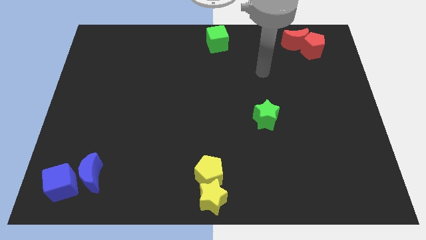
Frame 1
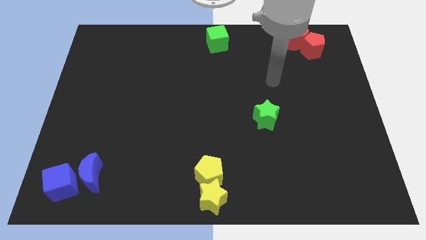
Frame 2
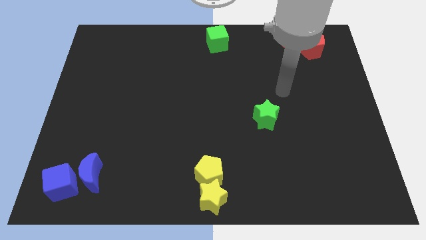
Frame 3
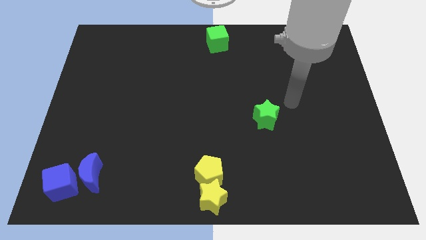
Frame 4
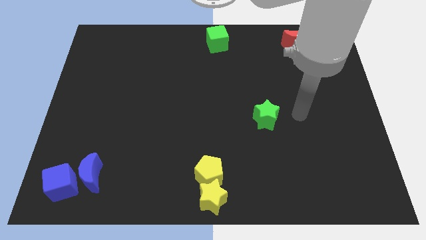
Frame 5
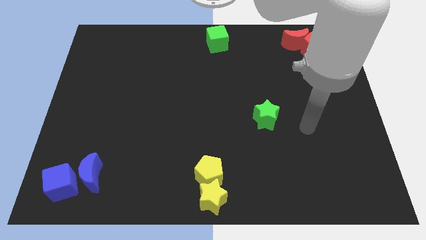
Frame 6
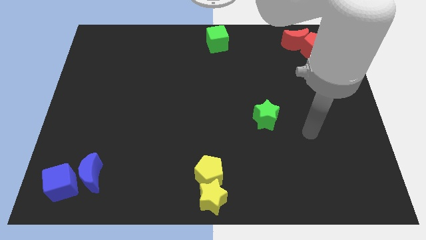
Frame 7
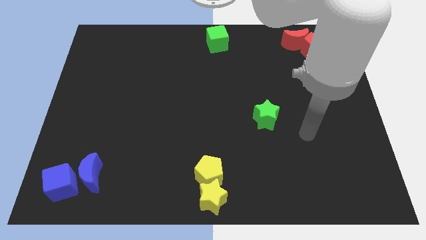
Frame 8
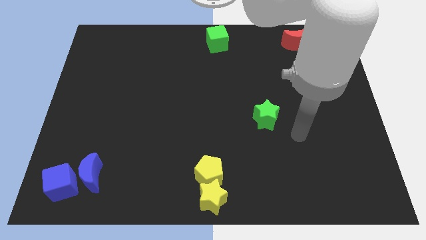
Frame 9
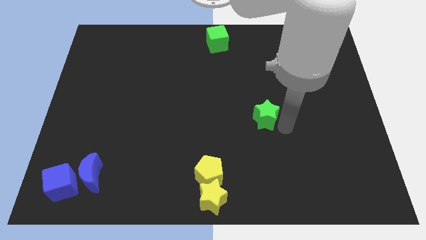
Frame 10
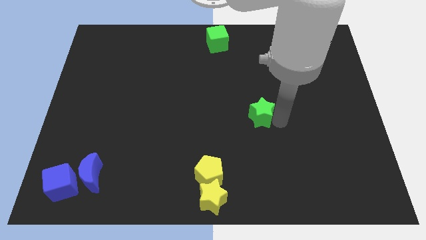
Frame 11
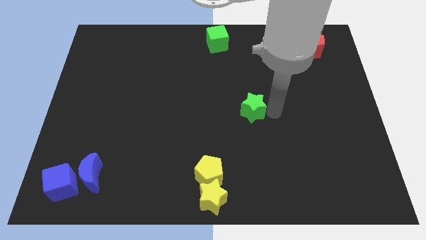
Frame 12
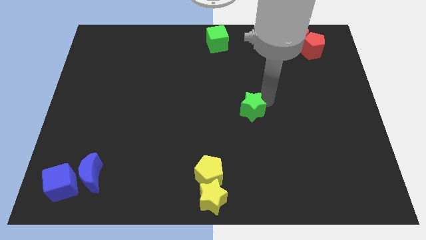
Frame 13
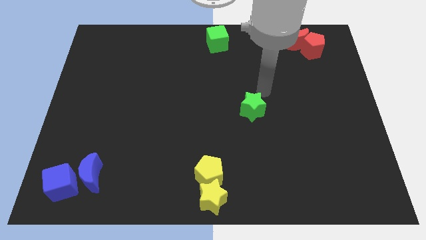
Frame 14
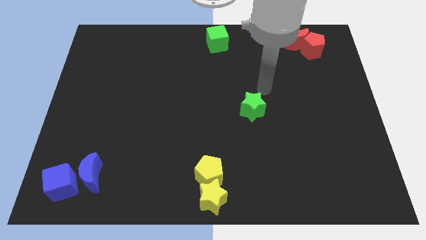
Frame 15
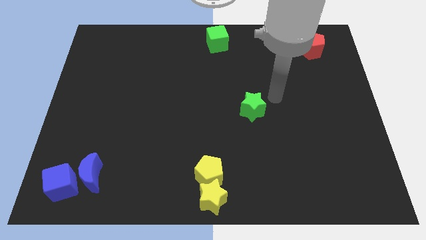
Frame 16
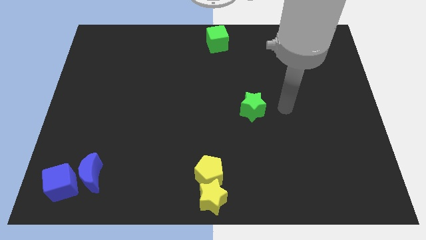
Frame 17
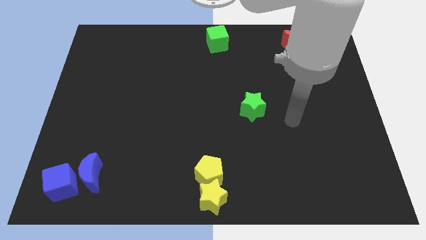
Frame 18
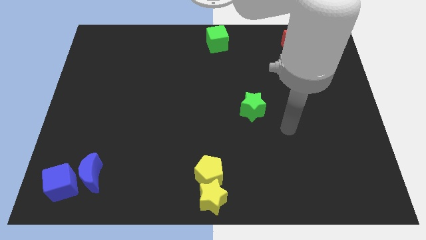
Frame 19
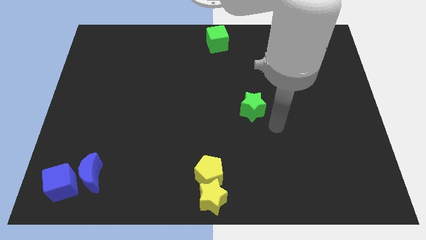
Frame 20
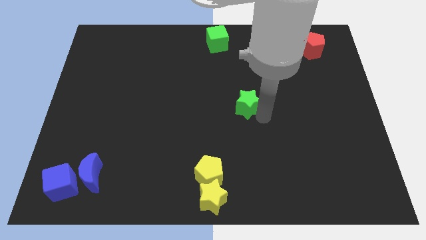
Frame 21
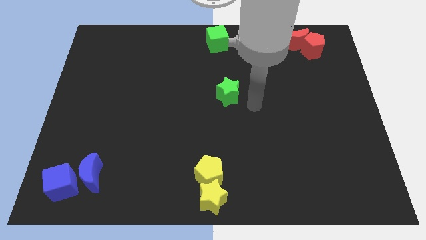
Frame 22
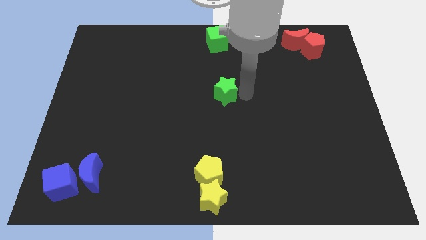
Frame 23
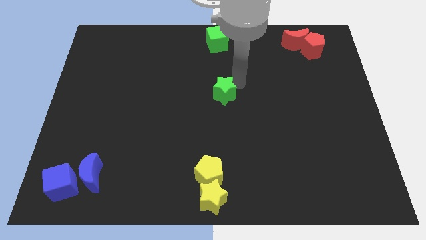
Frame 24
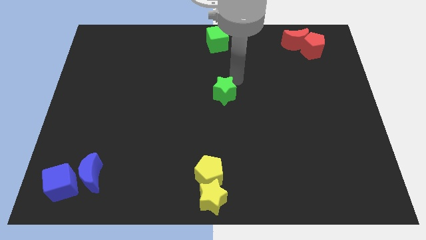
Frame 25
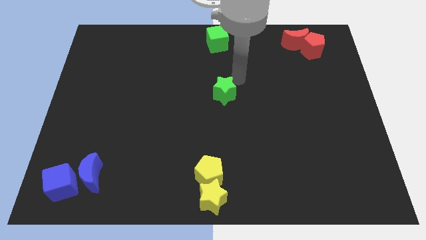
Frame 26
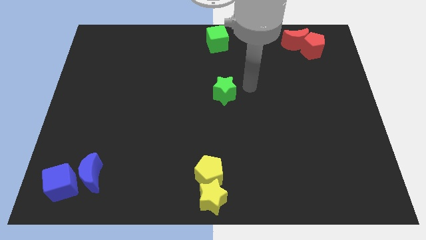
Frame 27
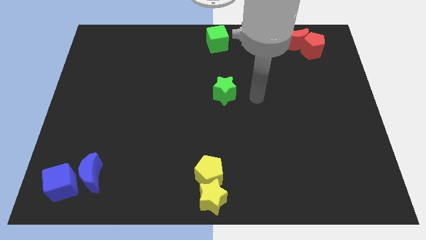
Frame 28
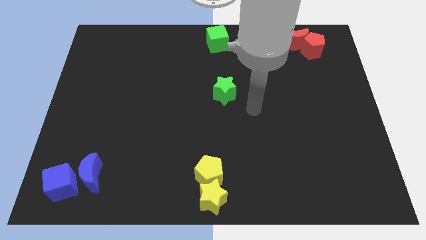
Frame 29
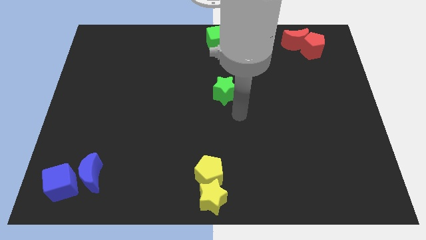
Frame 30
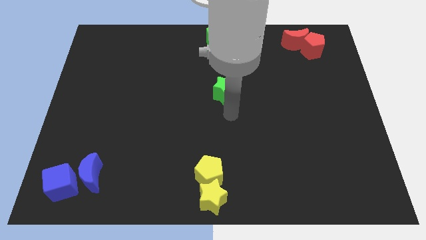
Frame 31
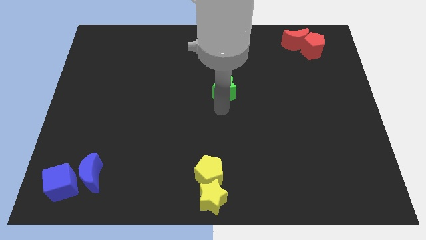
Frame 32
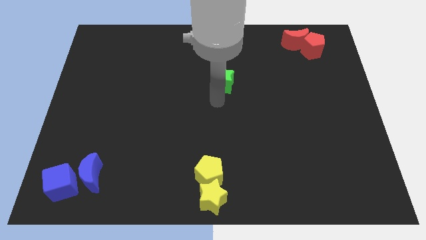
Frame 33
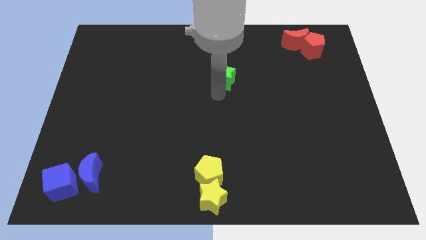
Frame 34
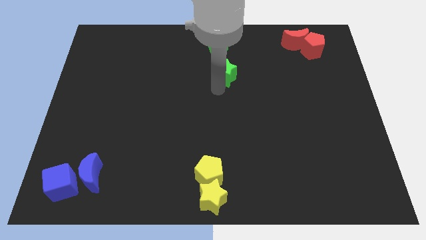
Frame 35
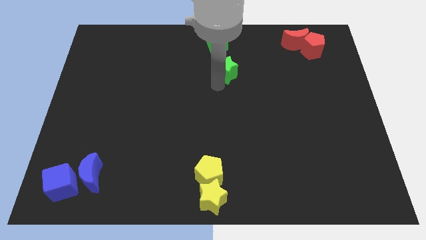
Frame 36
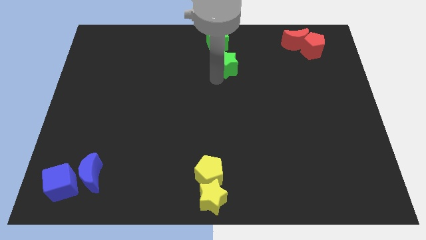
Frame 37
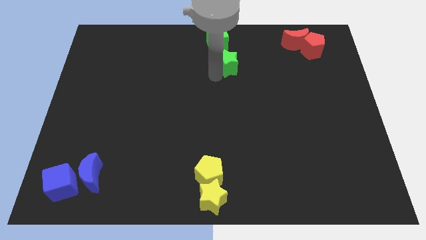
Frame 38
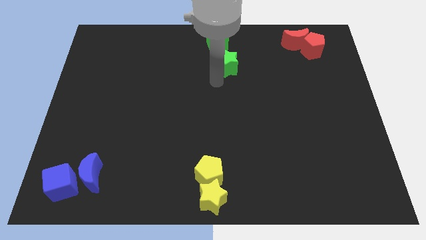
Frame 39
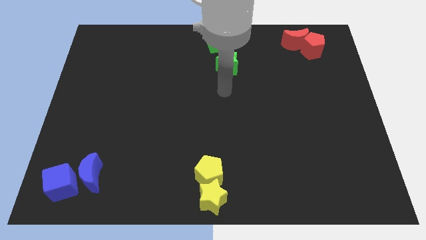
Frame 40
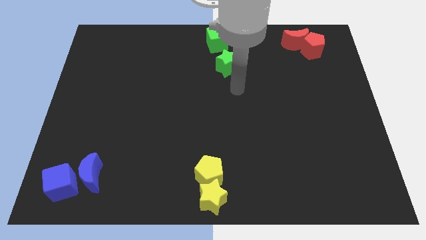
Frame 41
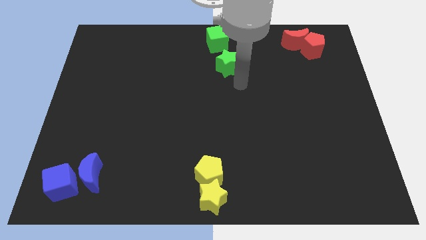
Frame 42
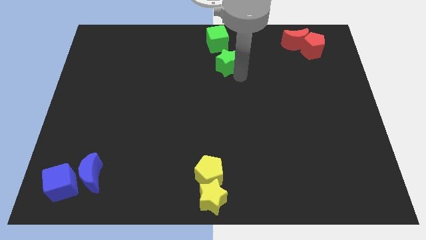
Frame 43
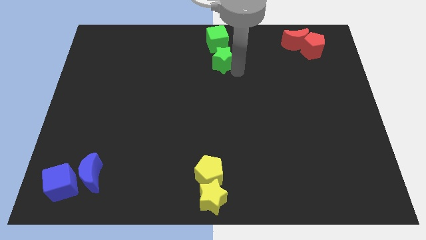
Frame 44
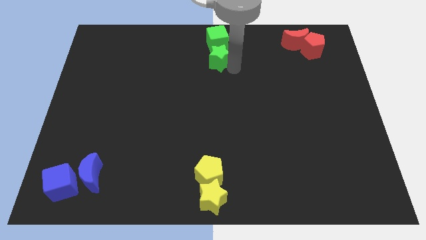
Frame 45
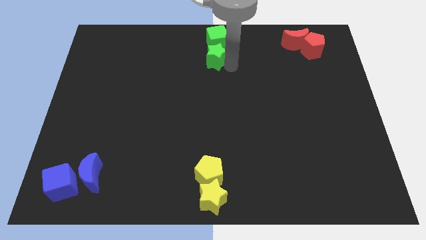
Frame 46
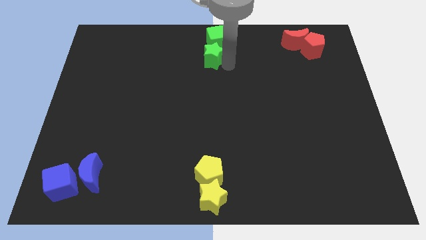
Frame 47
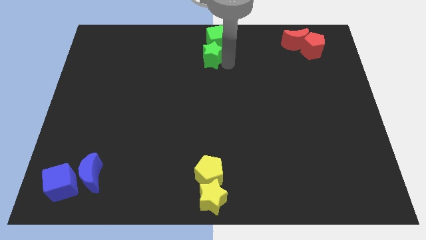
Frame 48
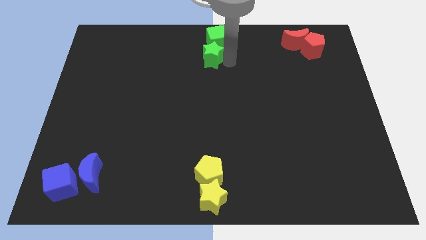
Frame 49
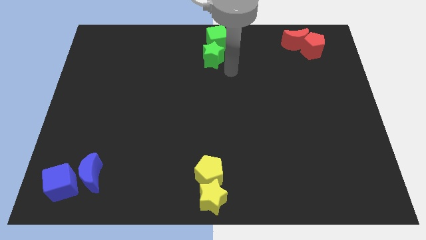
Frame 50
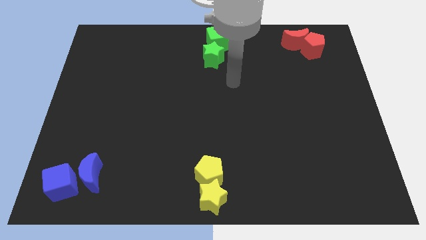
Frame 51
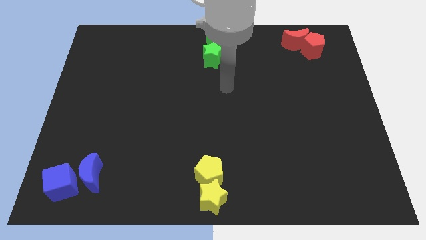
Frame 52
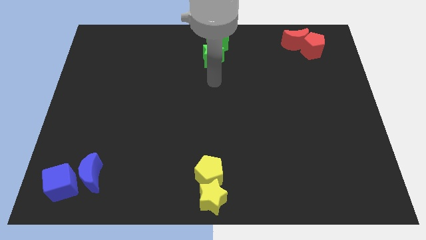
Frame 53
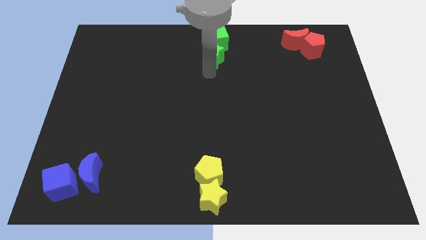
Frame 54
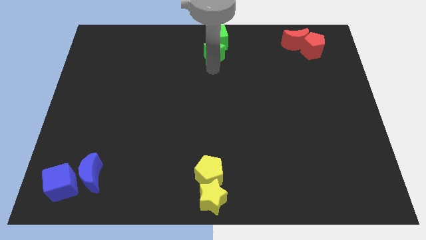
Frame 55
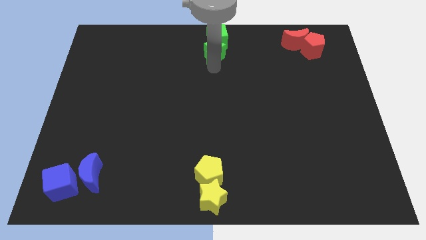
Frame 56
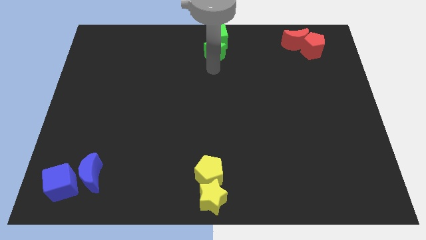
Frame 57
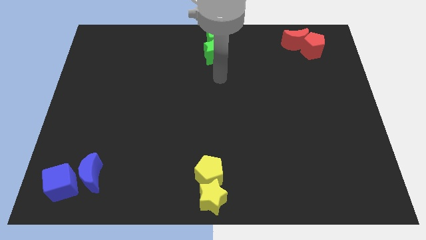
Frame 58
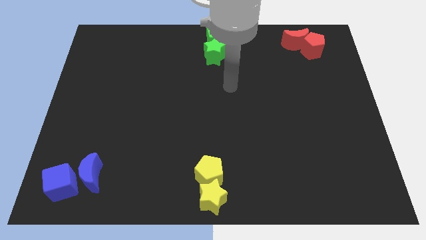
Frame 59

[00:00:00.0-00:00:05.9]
push the green star into the green cube

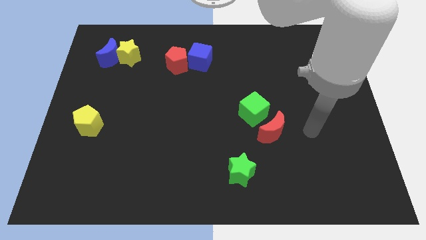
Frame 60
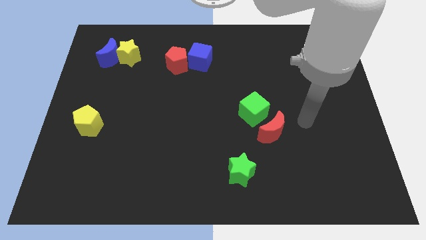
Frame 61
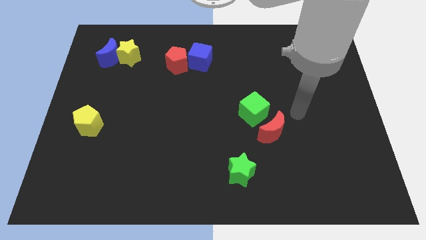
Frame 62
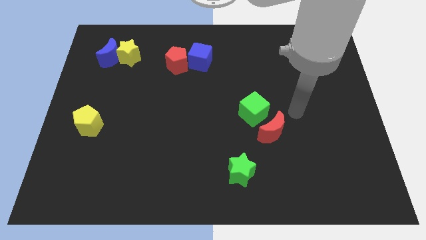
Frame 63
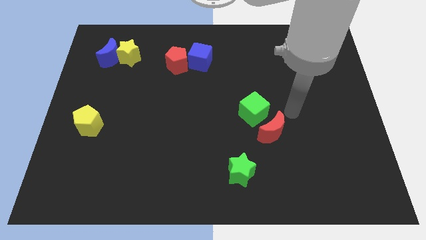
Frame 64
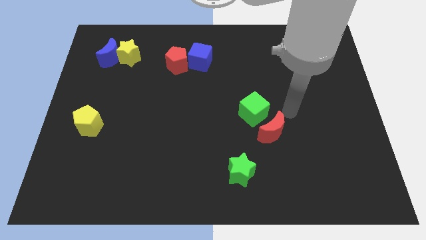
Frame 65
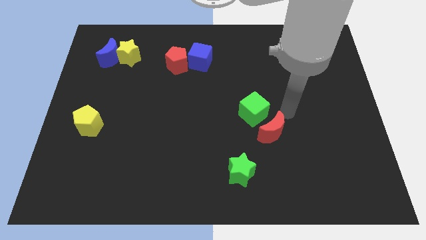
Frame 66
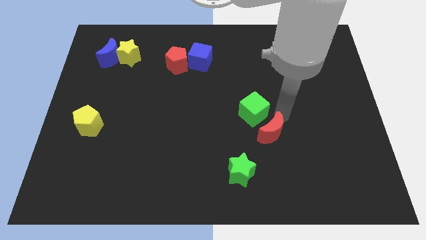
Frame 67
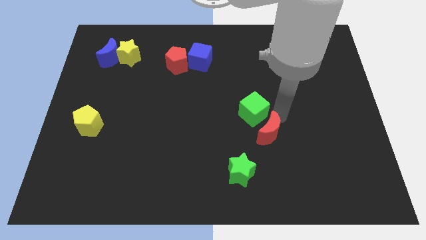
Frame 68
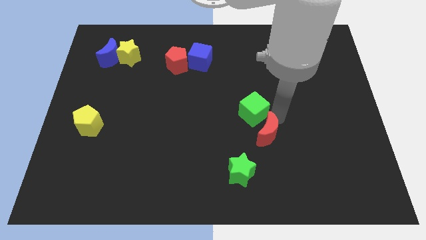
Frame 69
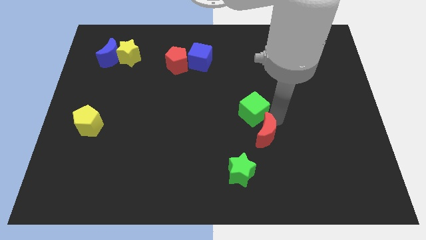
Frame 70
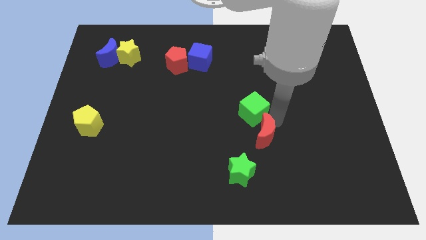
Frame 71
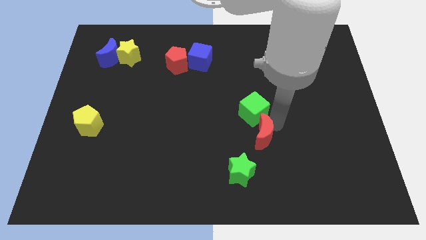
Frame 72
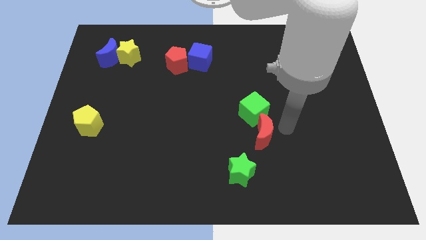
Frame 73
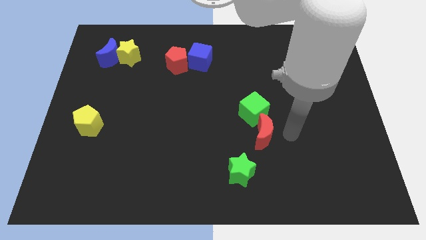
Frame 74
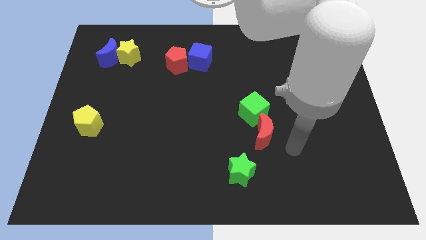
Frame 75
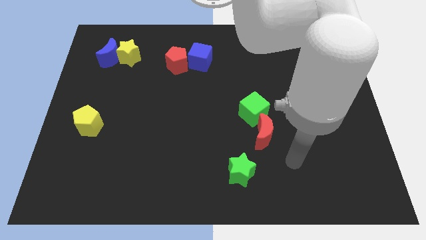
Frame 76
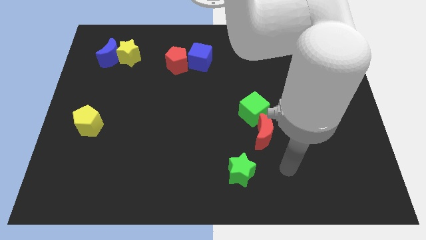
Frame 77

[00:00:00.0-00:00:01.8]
move the red crescent closer to the green cube

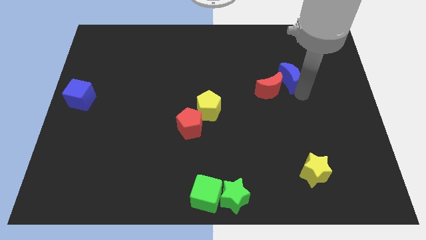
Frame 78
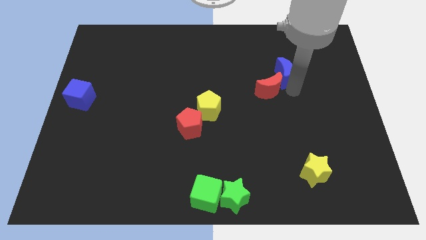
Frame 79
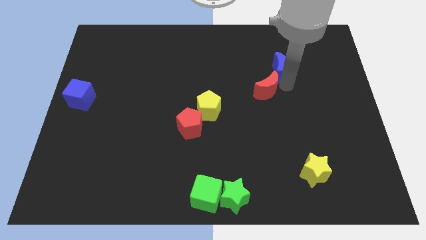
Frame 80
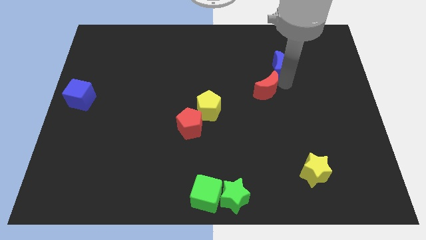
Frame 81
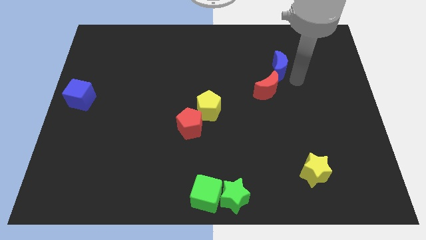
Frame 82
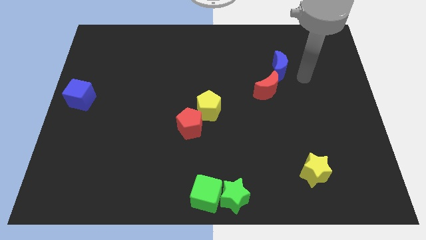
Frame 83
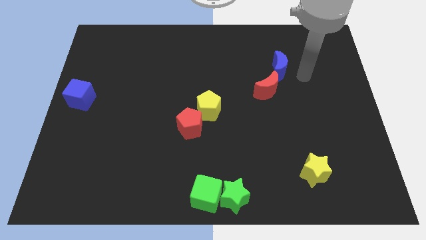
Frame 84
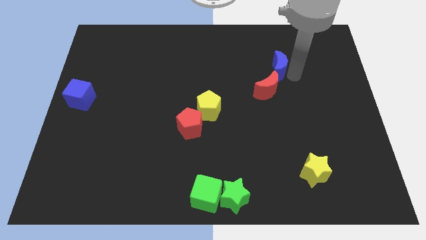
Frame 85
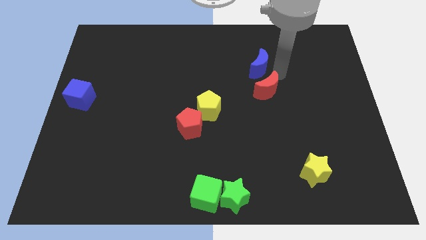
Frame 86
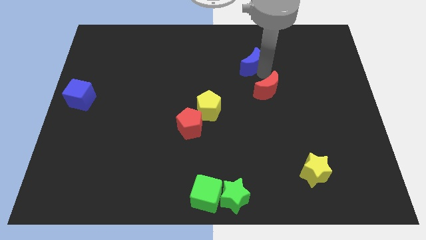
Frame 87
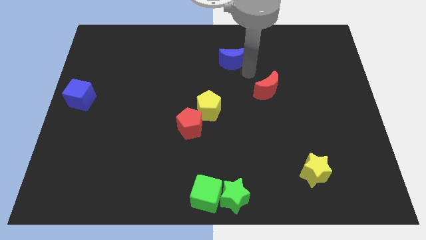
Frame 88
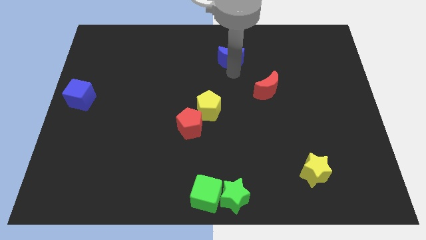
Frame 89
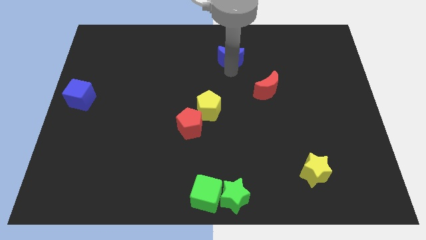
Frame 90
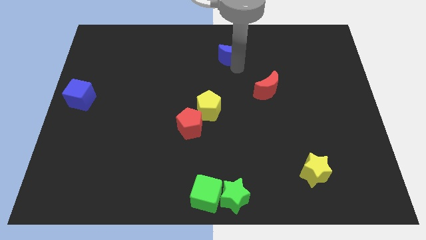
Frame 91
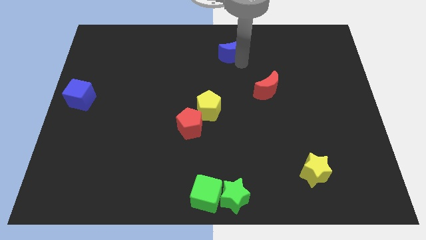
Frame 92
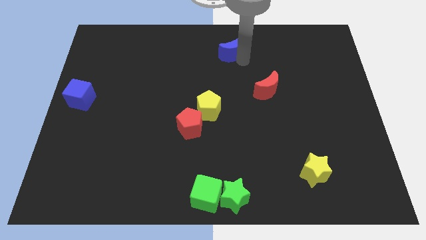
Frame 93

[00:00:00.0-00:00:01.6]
separate the blue moon from the red moon
